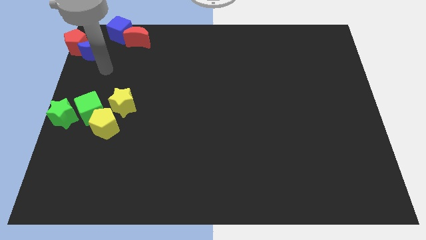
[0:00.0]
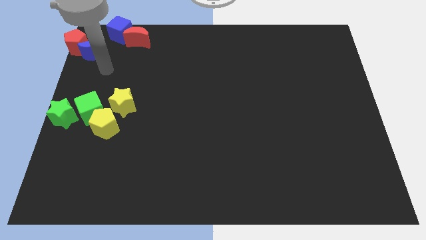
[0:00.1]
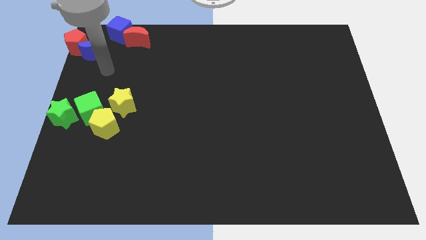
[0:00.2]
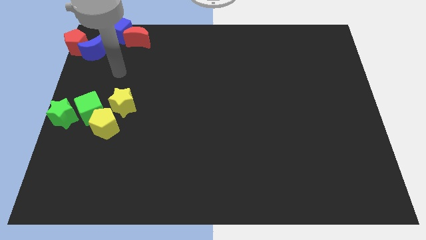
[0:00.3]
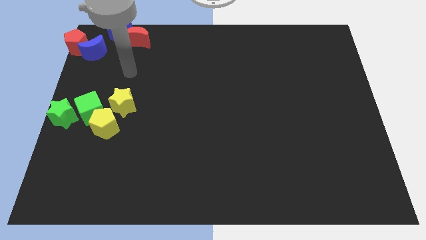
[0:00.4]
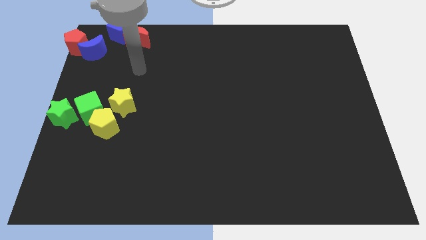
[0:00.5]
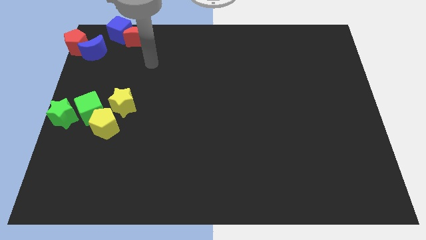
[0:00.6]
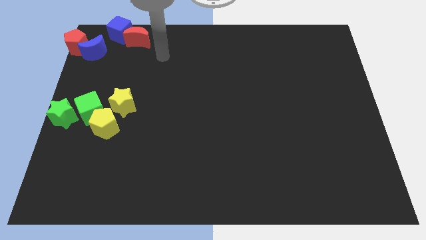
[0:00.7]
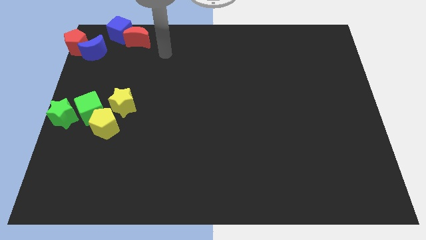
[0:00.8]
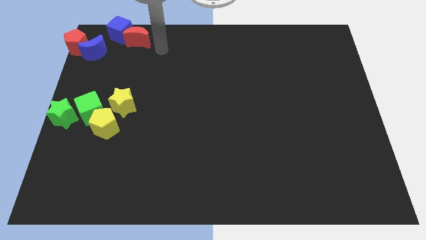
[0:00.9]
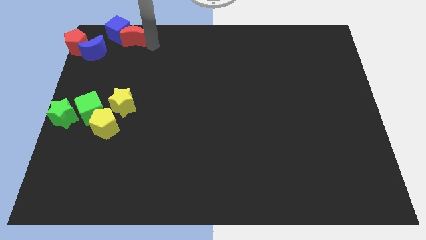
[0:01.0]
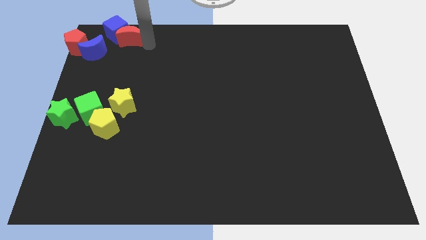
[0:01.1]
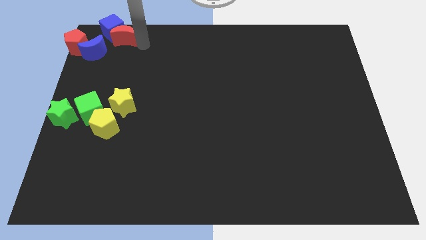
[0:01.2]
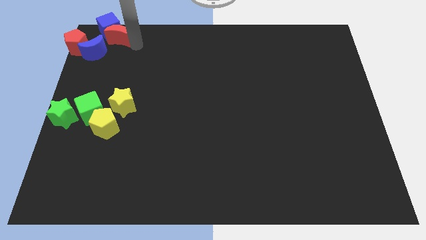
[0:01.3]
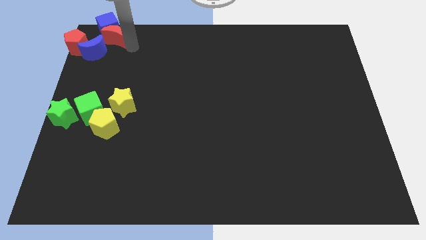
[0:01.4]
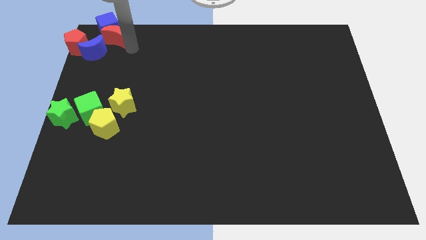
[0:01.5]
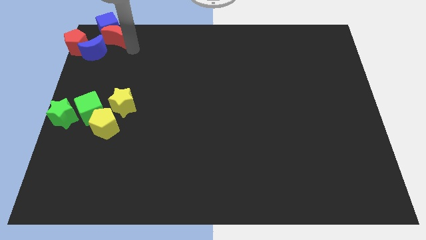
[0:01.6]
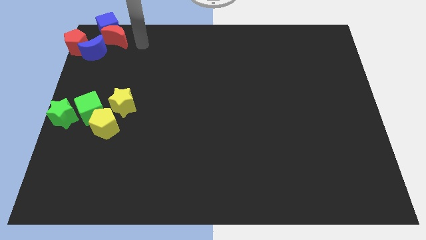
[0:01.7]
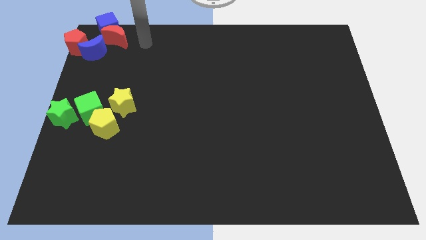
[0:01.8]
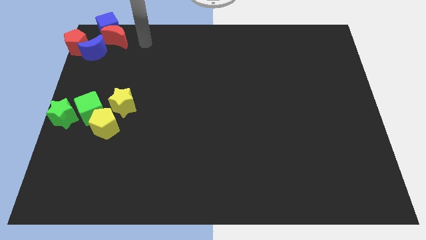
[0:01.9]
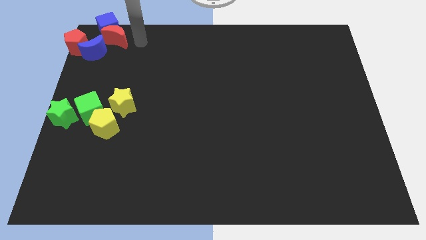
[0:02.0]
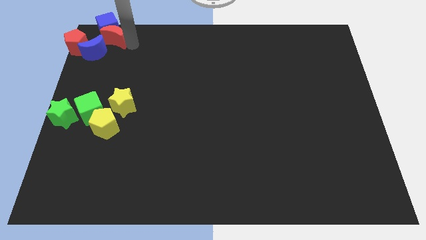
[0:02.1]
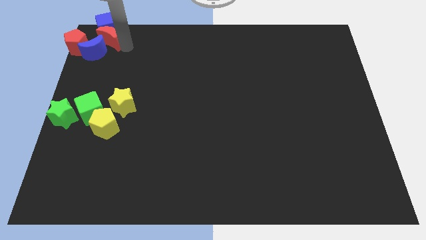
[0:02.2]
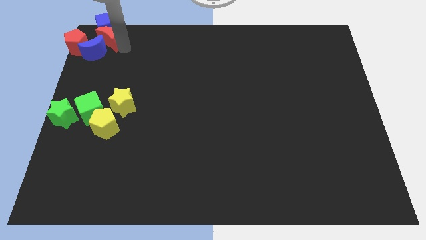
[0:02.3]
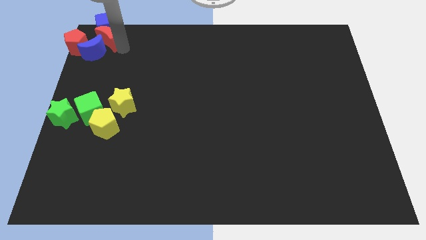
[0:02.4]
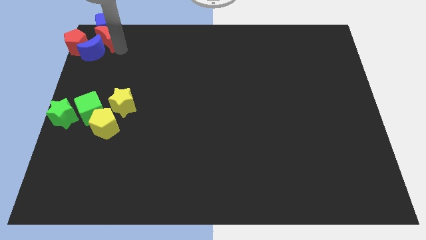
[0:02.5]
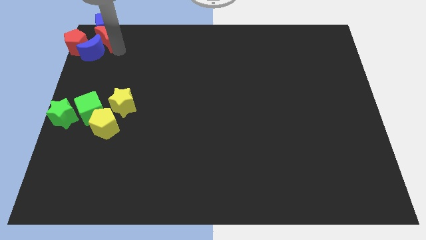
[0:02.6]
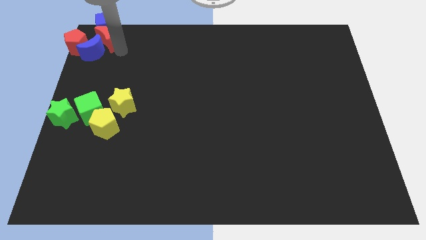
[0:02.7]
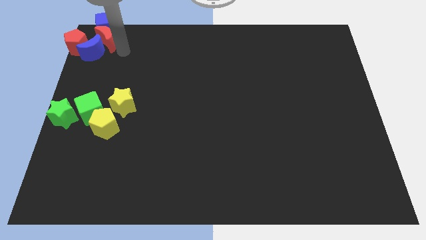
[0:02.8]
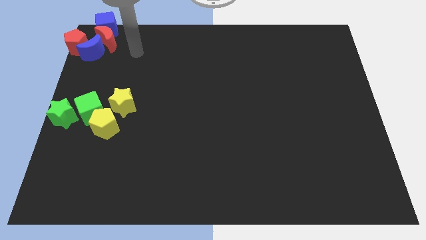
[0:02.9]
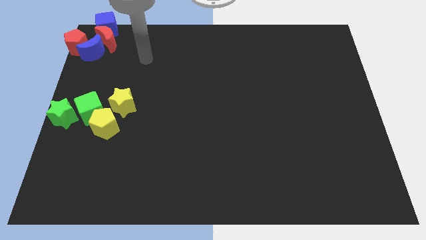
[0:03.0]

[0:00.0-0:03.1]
push the red moon into below the blue cube

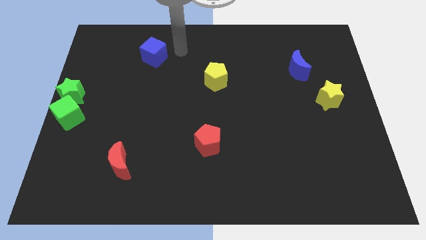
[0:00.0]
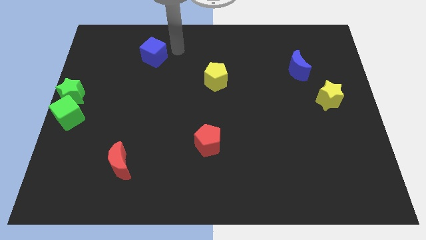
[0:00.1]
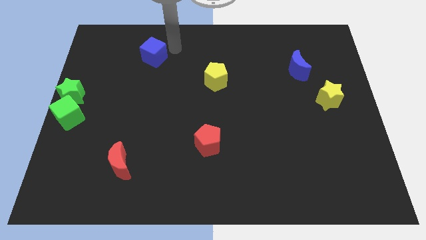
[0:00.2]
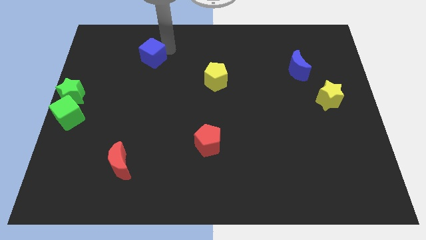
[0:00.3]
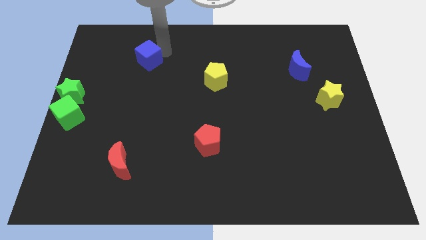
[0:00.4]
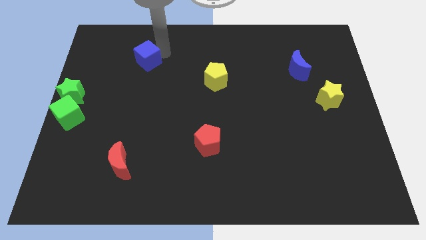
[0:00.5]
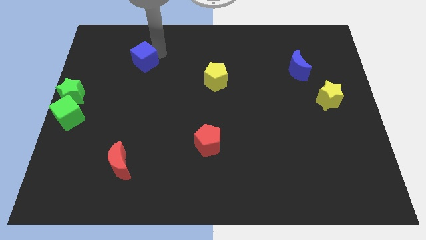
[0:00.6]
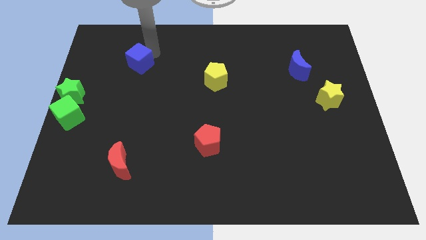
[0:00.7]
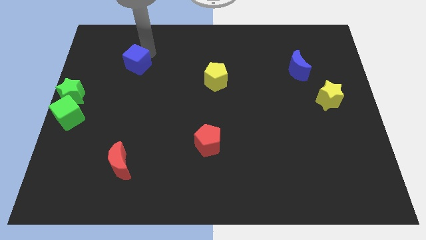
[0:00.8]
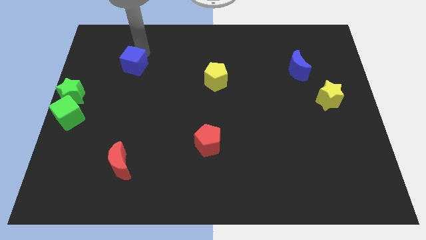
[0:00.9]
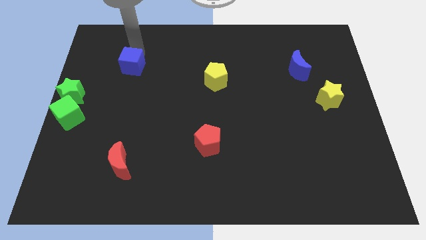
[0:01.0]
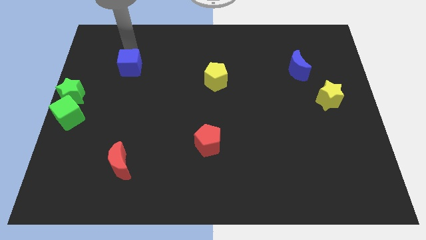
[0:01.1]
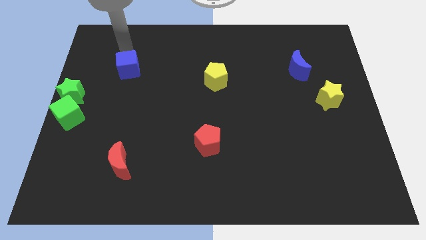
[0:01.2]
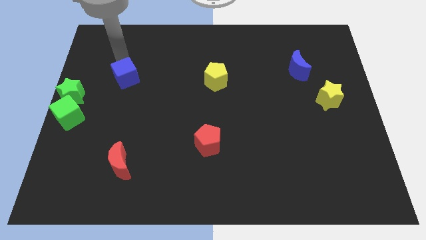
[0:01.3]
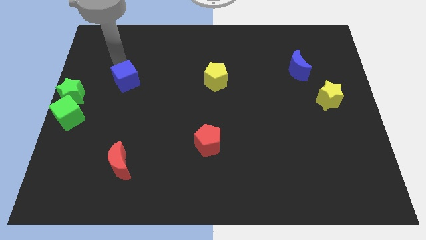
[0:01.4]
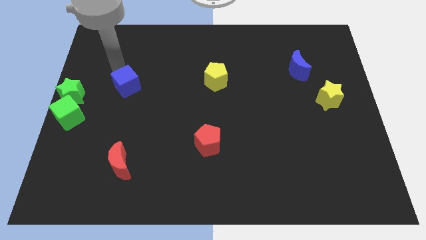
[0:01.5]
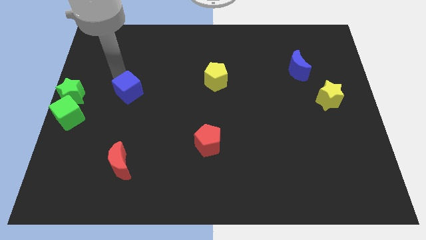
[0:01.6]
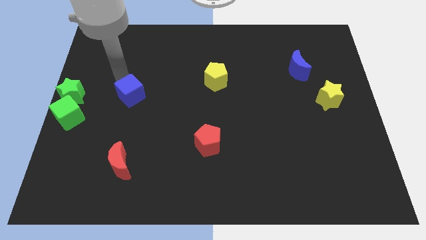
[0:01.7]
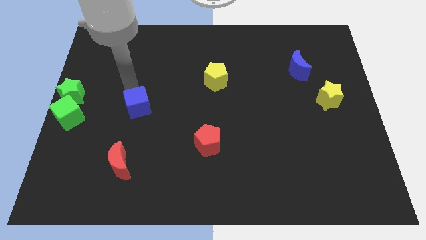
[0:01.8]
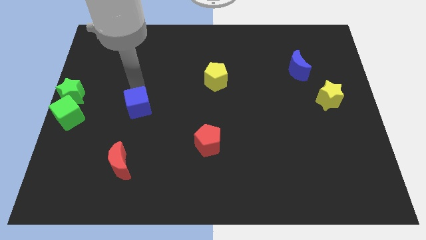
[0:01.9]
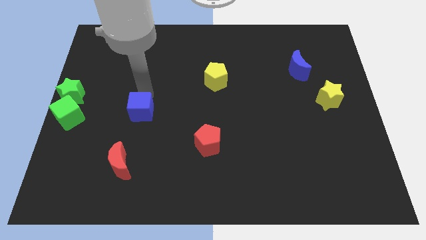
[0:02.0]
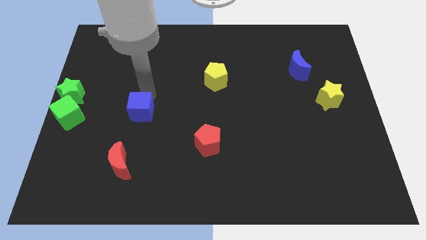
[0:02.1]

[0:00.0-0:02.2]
move blue cube towards the red crescent

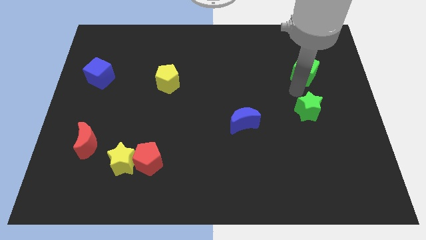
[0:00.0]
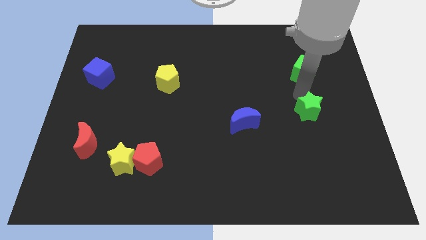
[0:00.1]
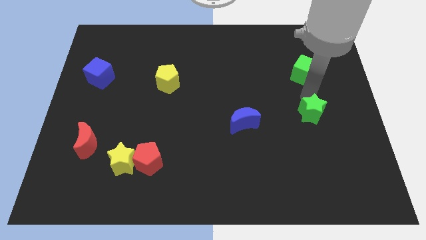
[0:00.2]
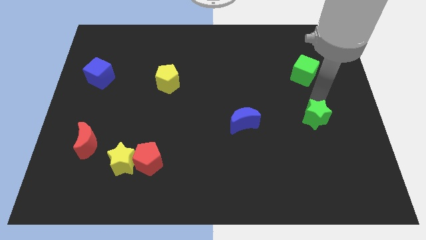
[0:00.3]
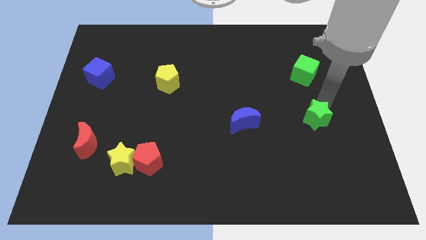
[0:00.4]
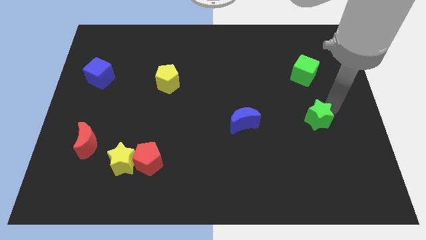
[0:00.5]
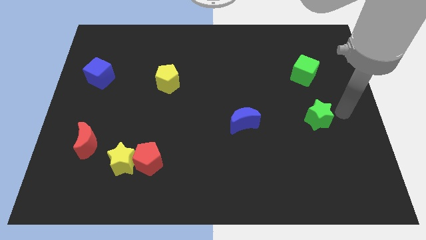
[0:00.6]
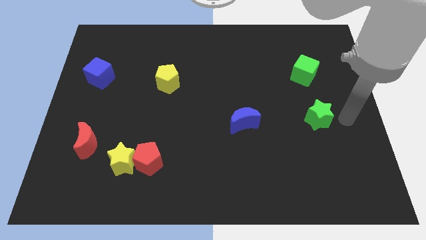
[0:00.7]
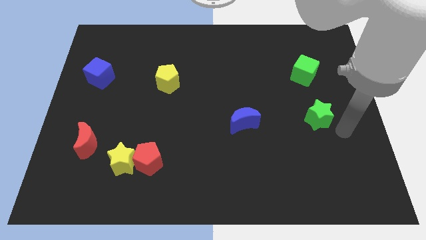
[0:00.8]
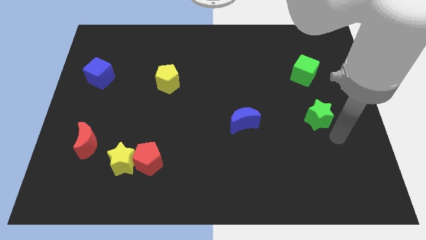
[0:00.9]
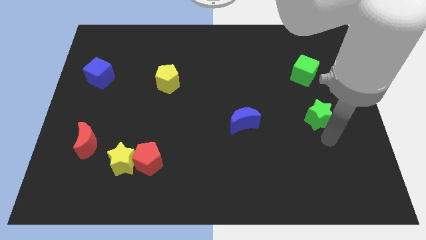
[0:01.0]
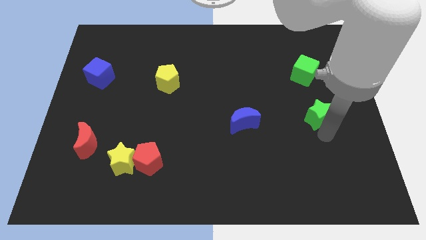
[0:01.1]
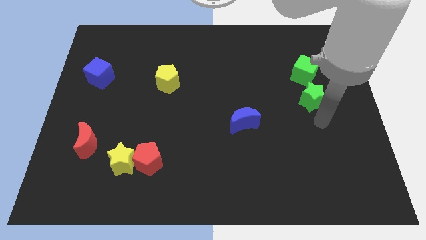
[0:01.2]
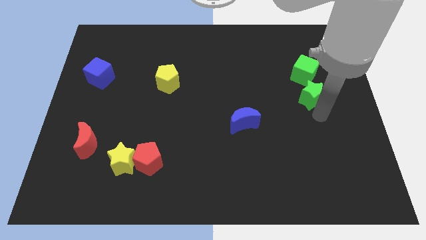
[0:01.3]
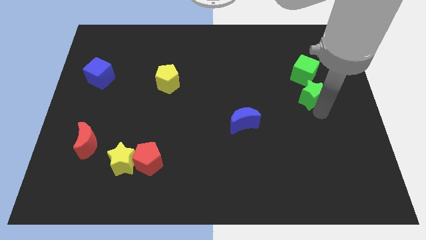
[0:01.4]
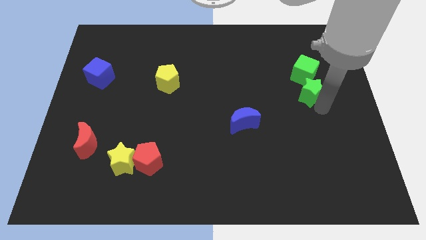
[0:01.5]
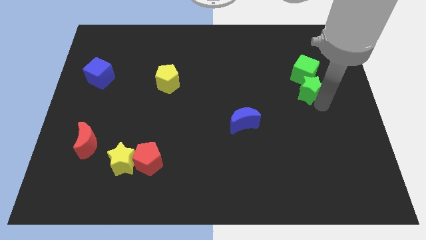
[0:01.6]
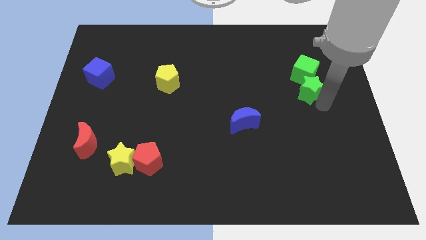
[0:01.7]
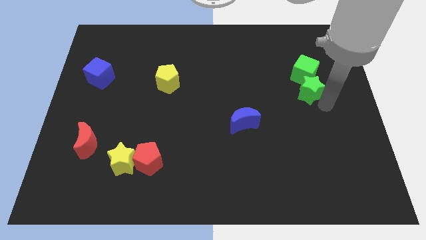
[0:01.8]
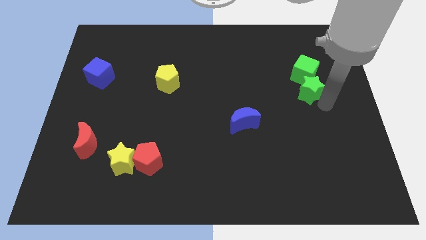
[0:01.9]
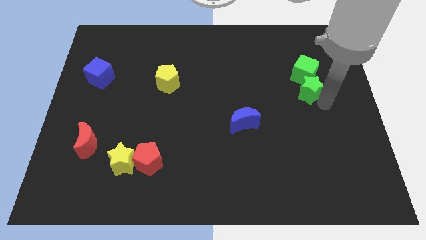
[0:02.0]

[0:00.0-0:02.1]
move the green star close to the green cube

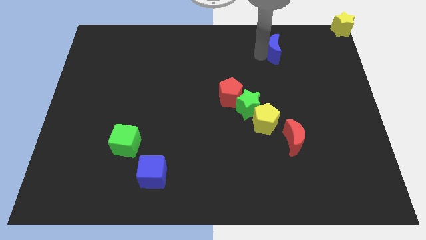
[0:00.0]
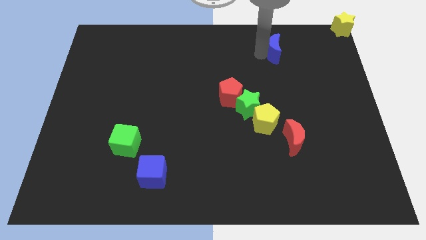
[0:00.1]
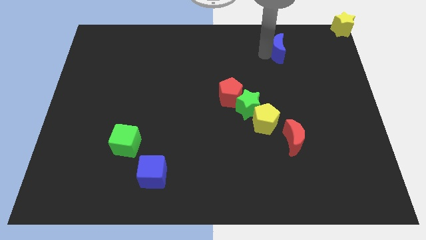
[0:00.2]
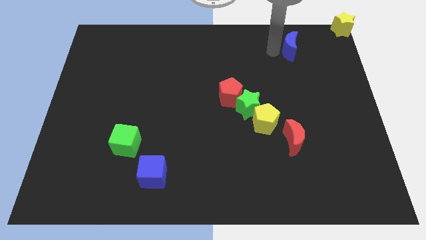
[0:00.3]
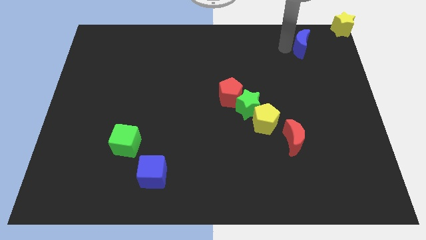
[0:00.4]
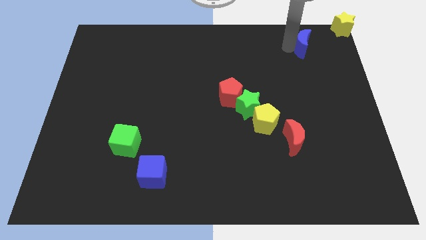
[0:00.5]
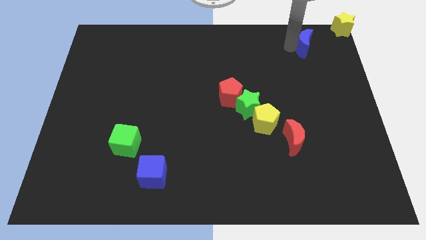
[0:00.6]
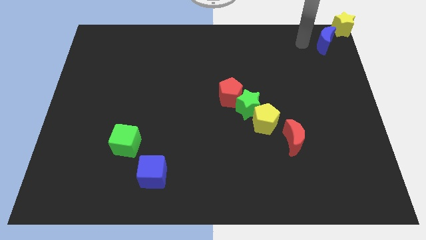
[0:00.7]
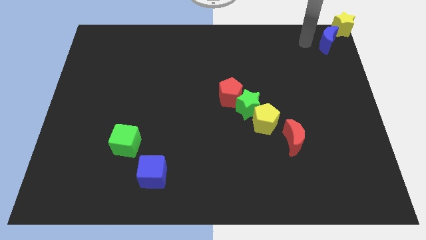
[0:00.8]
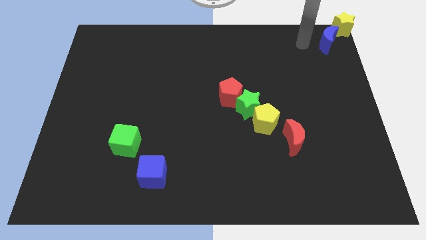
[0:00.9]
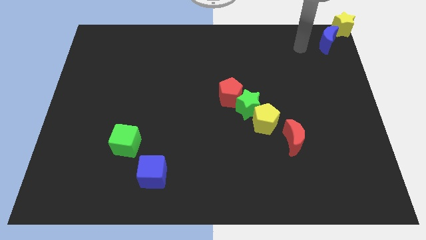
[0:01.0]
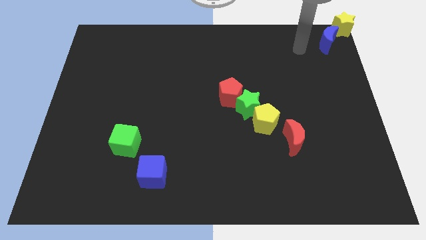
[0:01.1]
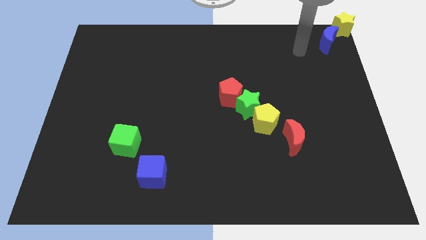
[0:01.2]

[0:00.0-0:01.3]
push the blue crescent to the bottom left of the yellow star
